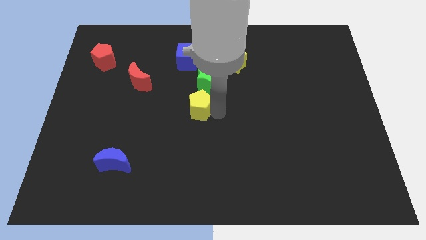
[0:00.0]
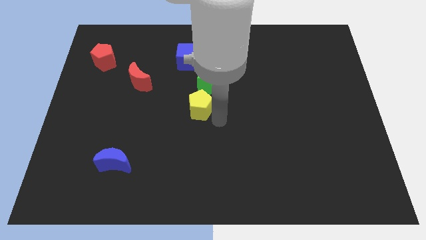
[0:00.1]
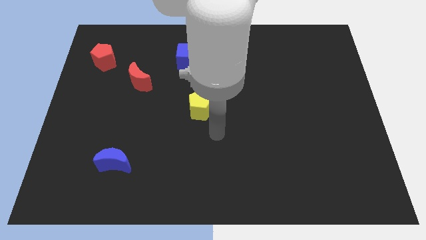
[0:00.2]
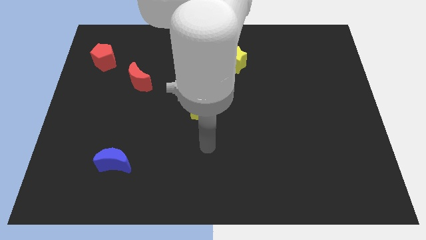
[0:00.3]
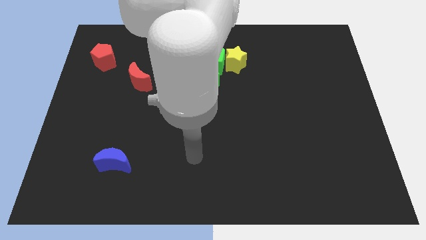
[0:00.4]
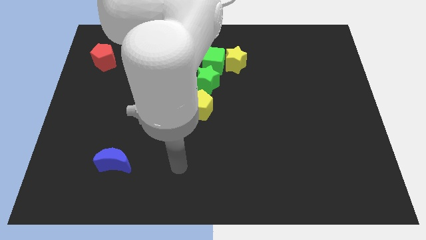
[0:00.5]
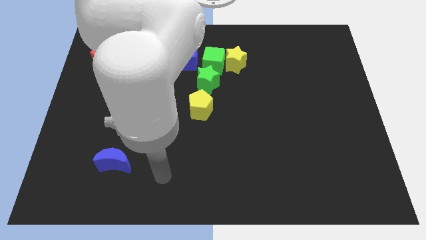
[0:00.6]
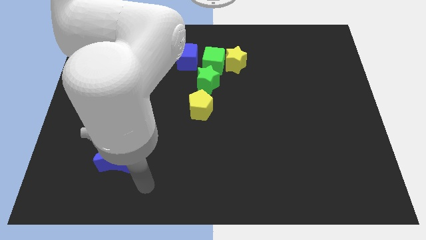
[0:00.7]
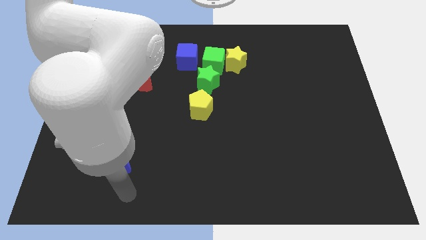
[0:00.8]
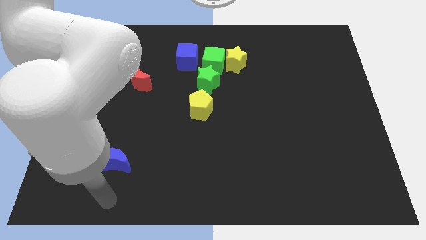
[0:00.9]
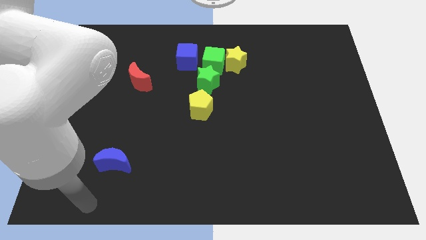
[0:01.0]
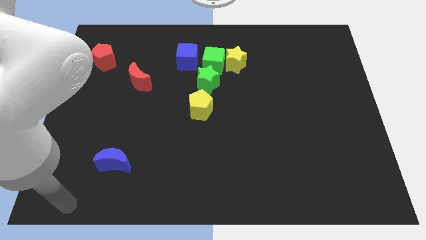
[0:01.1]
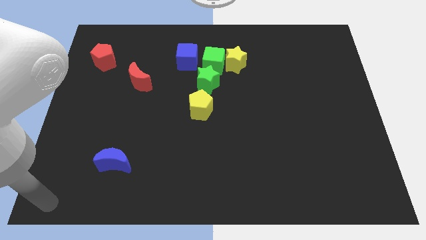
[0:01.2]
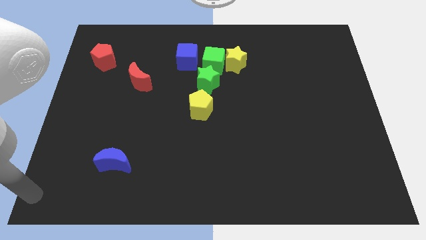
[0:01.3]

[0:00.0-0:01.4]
place your arm at the bottom left corner of the board

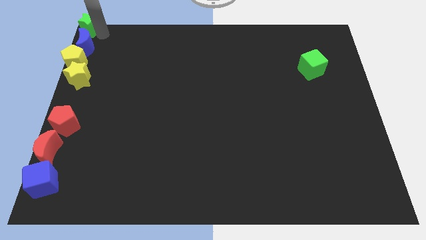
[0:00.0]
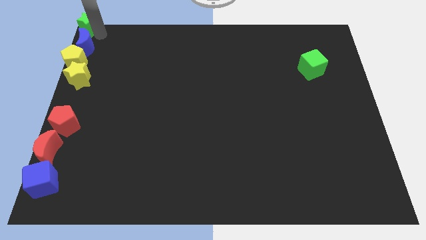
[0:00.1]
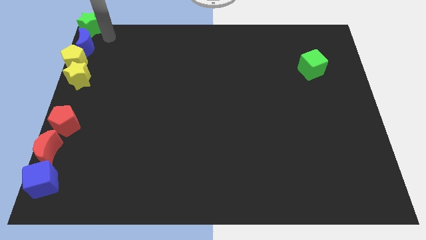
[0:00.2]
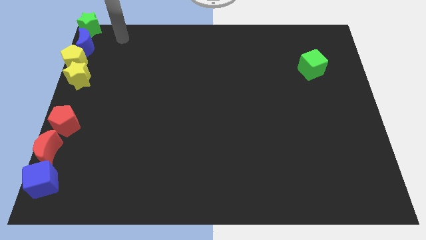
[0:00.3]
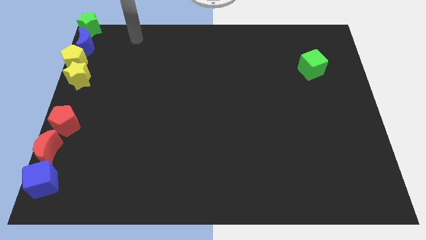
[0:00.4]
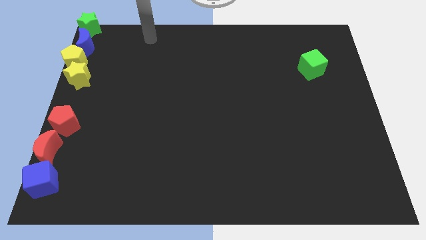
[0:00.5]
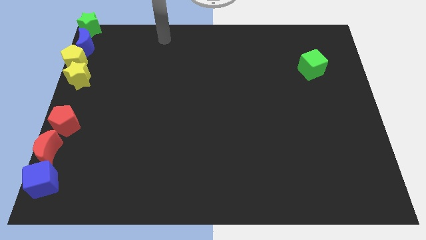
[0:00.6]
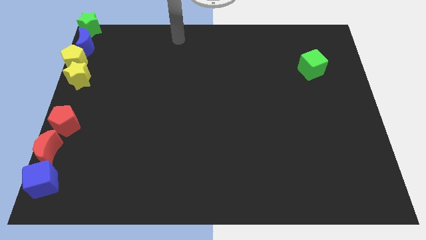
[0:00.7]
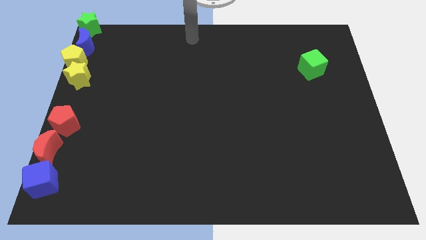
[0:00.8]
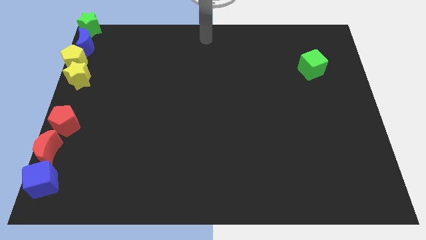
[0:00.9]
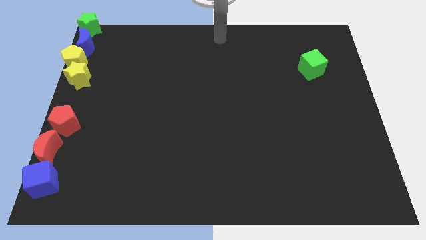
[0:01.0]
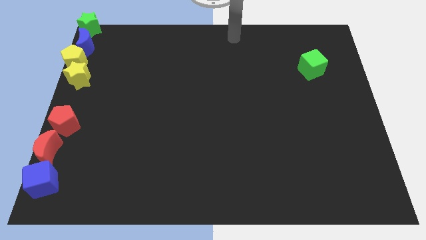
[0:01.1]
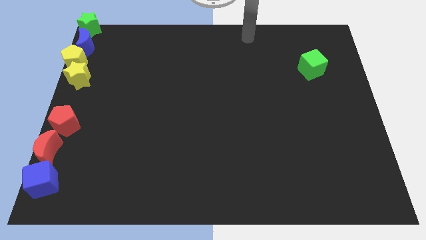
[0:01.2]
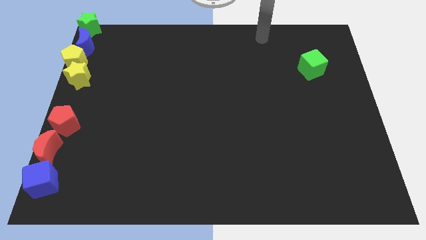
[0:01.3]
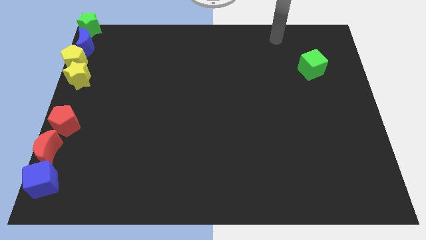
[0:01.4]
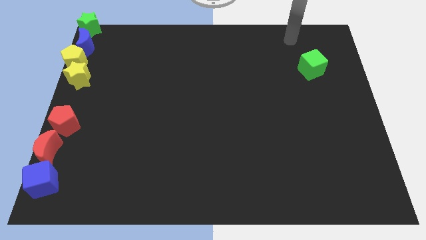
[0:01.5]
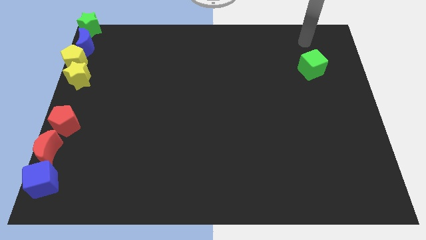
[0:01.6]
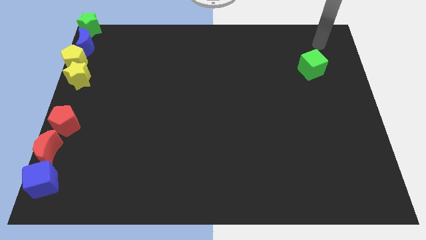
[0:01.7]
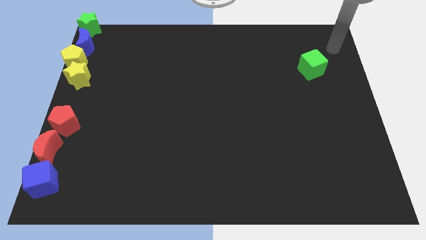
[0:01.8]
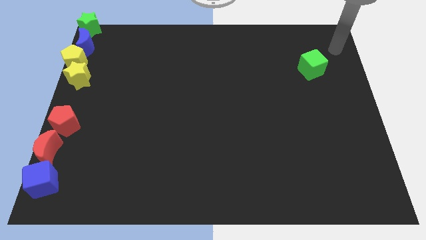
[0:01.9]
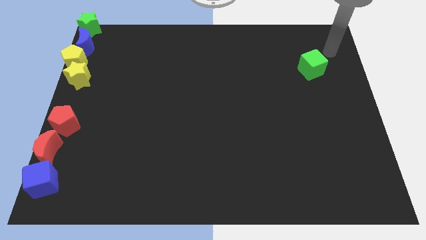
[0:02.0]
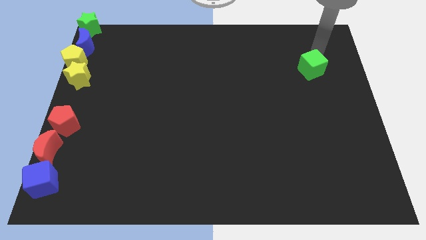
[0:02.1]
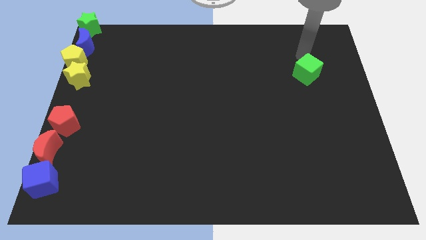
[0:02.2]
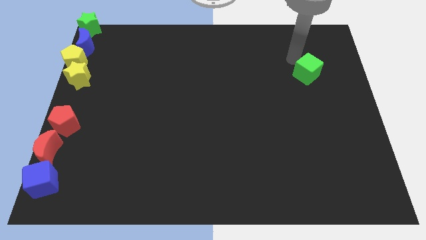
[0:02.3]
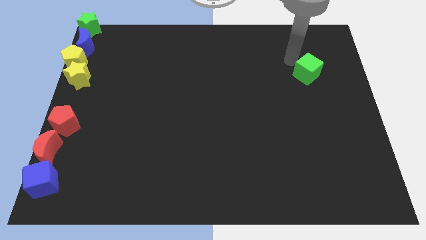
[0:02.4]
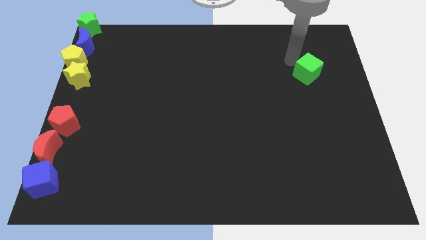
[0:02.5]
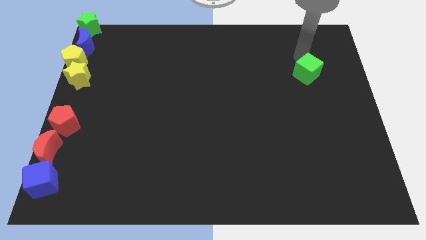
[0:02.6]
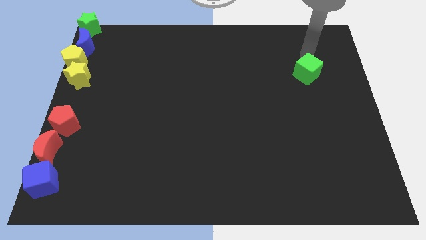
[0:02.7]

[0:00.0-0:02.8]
move your arm near green cube

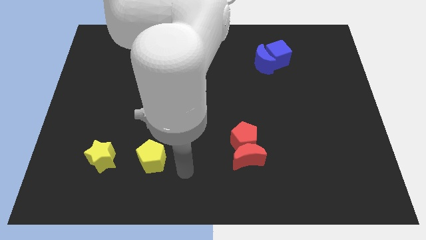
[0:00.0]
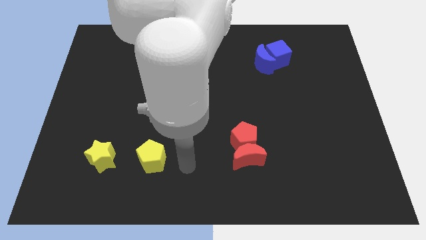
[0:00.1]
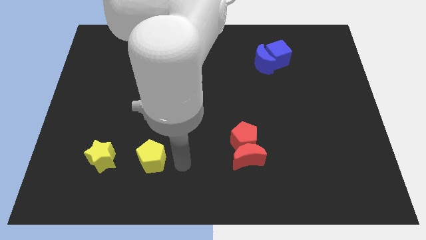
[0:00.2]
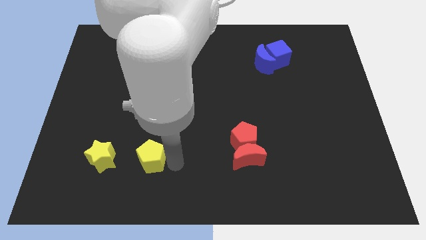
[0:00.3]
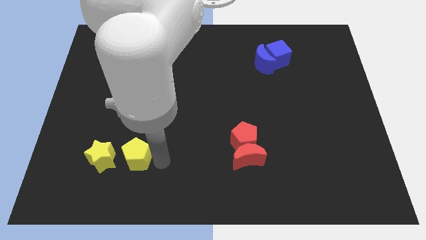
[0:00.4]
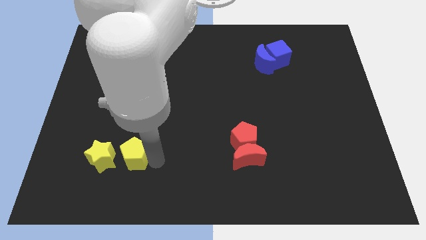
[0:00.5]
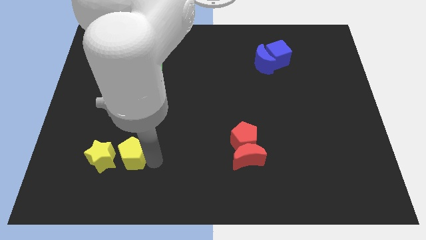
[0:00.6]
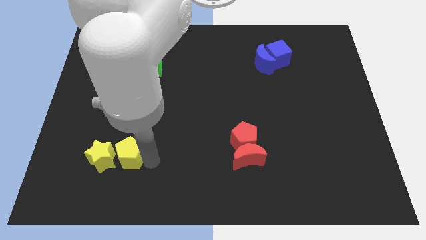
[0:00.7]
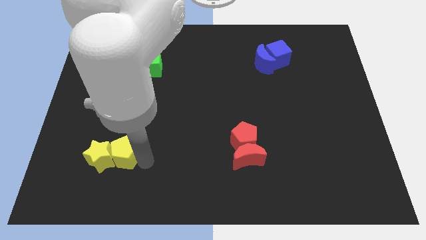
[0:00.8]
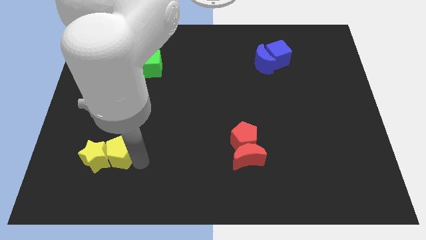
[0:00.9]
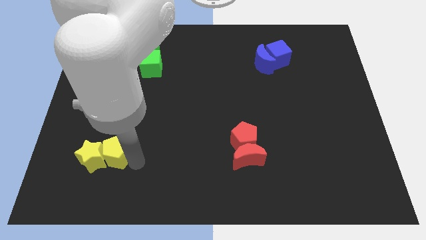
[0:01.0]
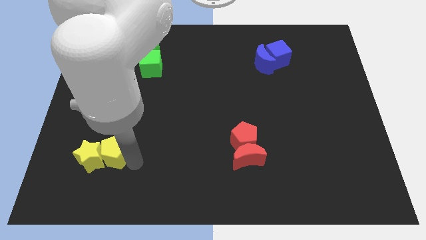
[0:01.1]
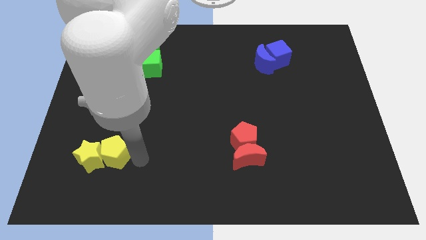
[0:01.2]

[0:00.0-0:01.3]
push the yellow pentagon into the yellow star

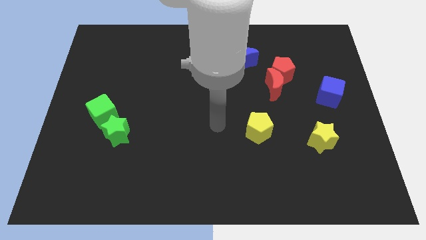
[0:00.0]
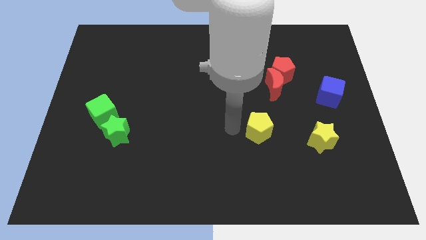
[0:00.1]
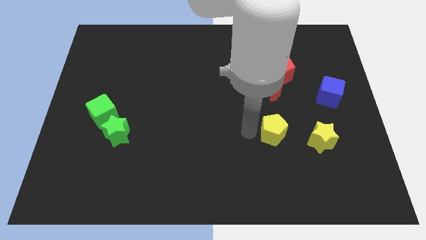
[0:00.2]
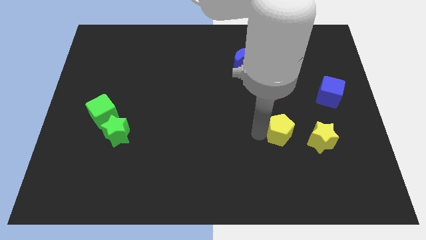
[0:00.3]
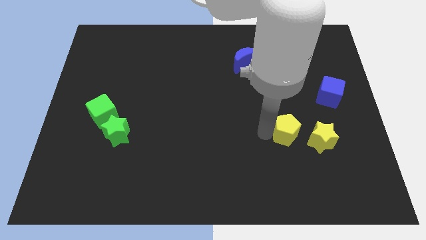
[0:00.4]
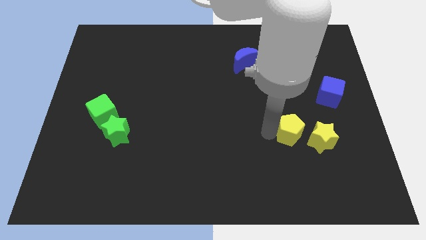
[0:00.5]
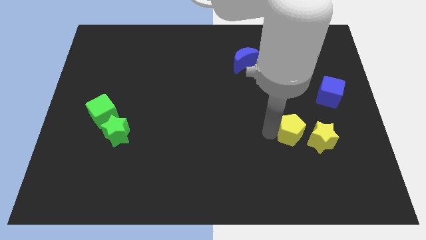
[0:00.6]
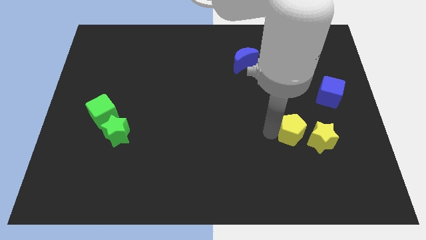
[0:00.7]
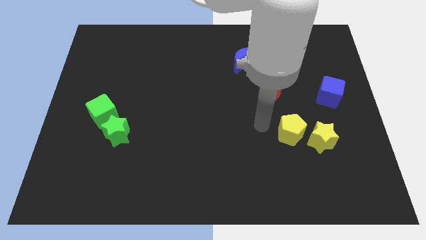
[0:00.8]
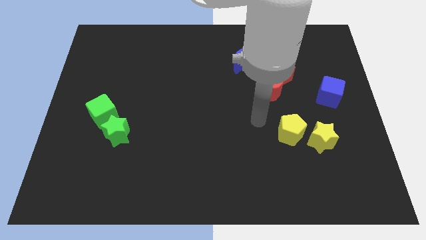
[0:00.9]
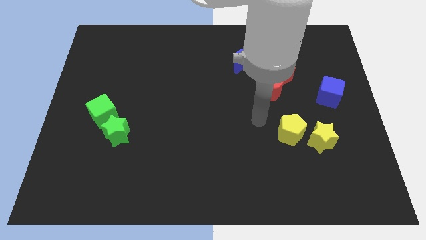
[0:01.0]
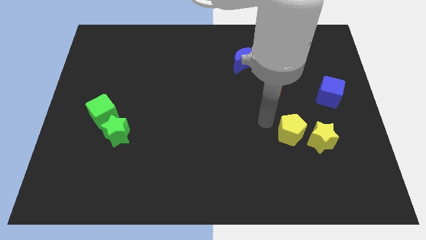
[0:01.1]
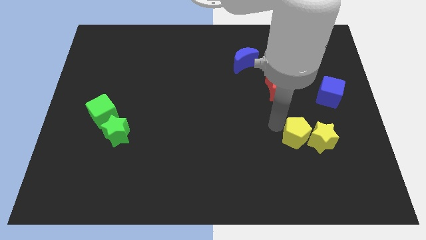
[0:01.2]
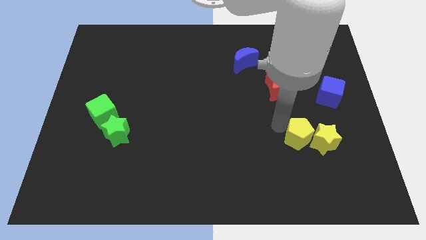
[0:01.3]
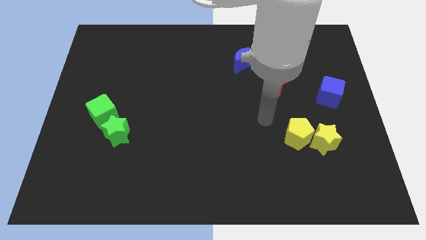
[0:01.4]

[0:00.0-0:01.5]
move the yellow pentagon into the left of the yellow star

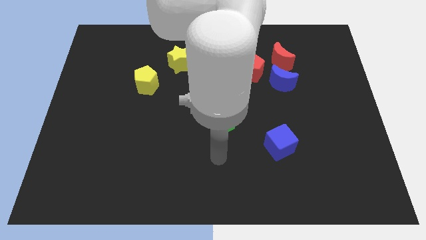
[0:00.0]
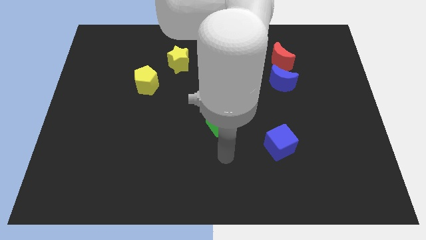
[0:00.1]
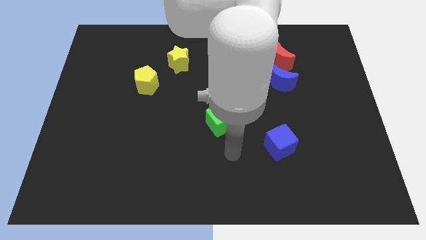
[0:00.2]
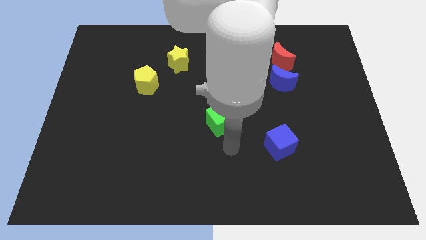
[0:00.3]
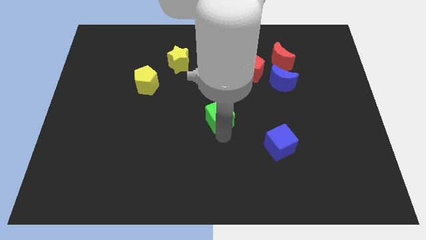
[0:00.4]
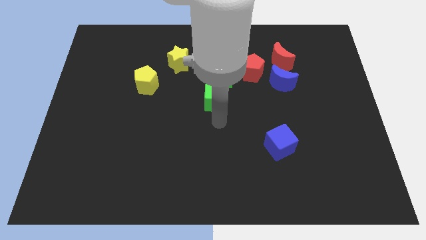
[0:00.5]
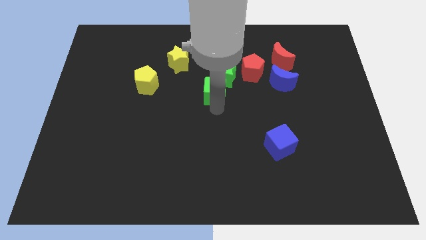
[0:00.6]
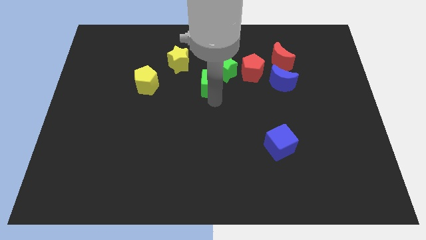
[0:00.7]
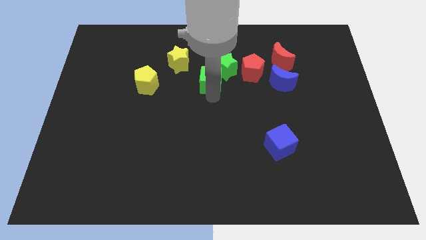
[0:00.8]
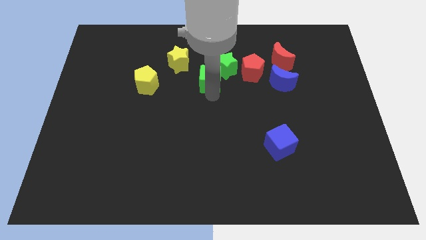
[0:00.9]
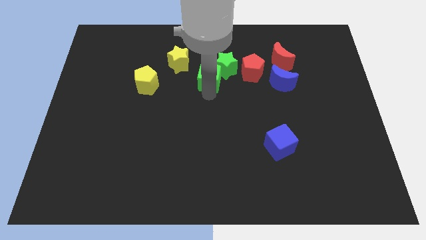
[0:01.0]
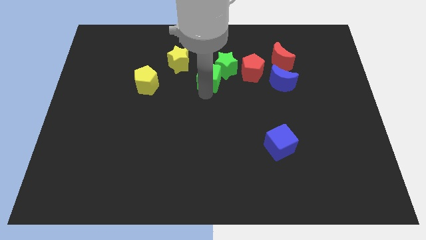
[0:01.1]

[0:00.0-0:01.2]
push green star with green cube

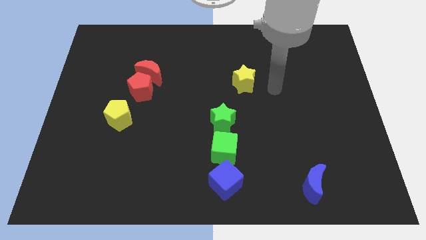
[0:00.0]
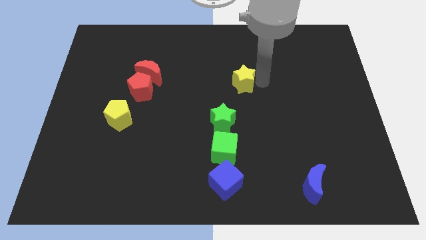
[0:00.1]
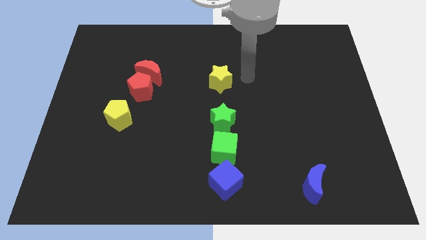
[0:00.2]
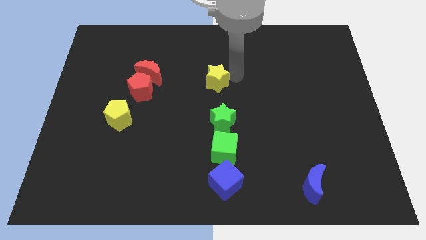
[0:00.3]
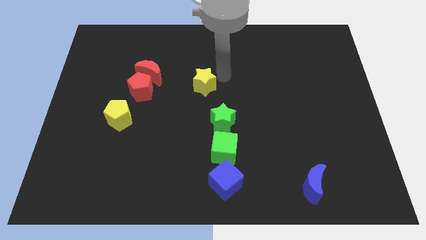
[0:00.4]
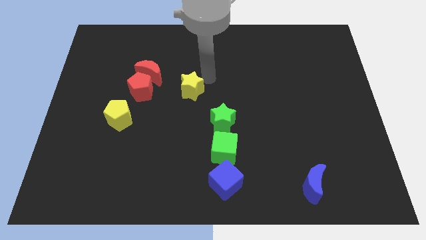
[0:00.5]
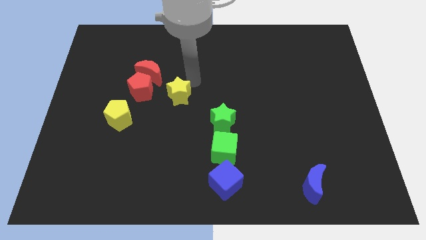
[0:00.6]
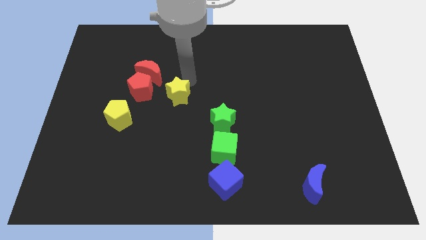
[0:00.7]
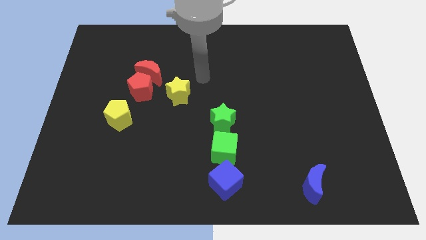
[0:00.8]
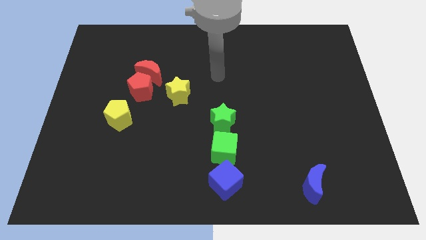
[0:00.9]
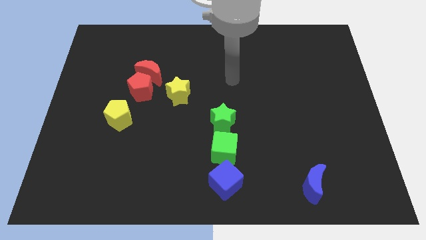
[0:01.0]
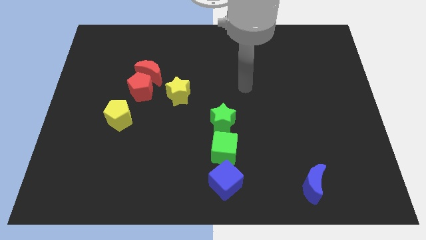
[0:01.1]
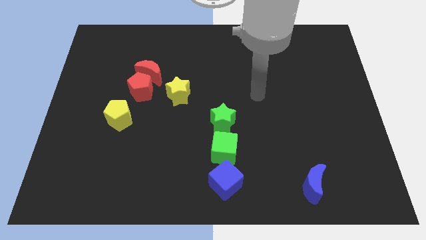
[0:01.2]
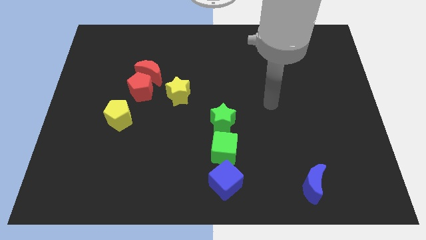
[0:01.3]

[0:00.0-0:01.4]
move your arm away from the yellow star
